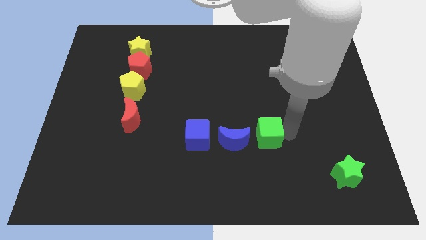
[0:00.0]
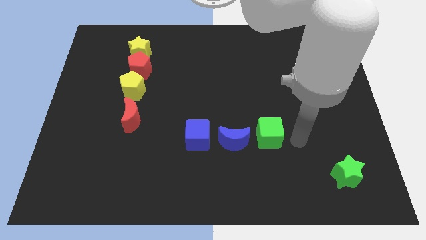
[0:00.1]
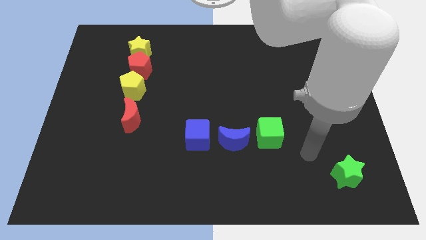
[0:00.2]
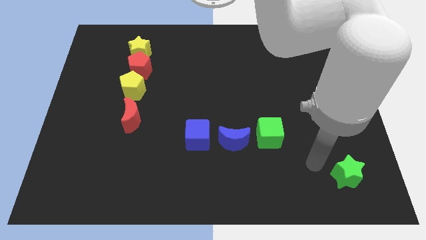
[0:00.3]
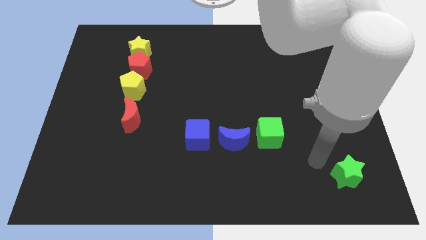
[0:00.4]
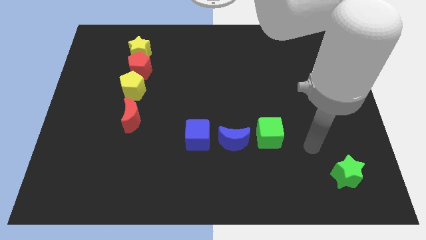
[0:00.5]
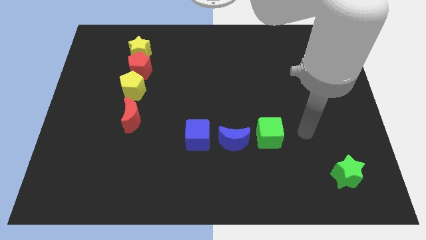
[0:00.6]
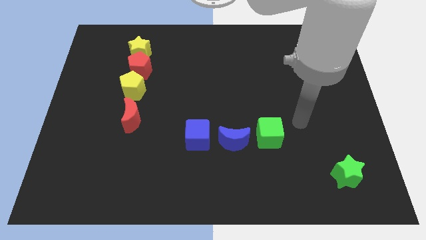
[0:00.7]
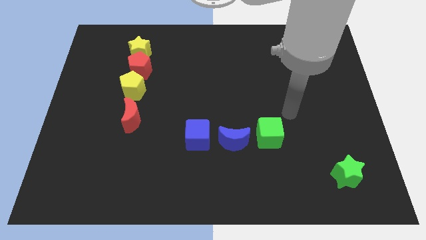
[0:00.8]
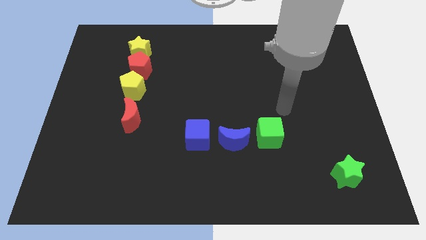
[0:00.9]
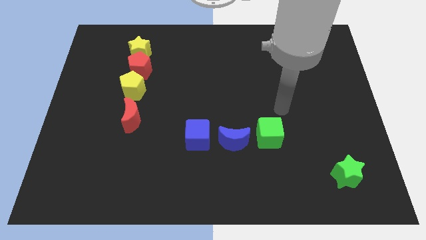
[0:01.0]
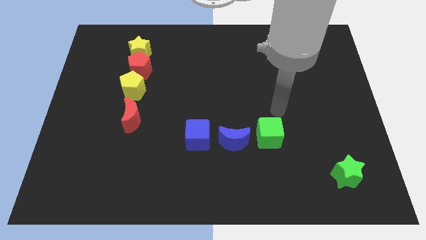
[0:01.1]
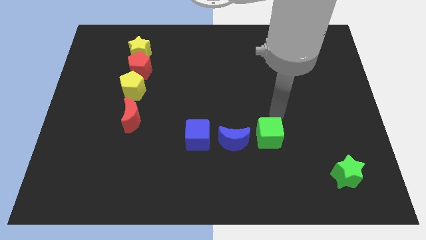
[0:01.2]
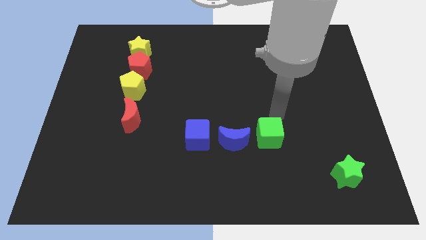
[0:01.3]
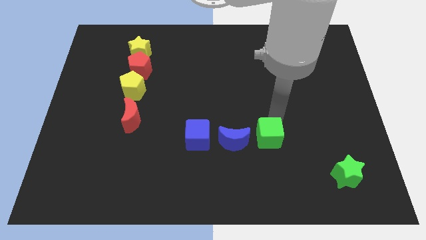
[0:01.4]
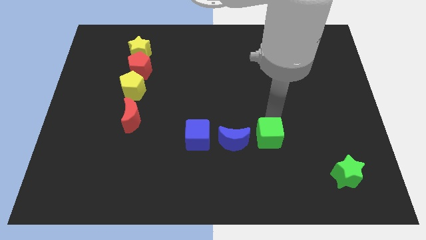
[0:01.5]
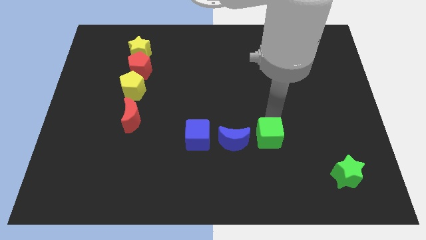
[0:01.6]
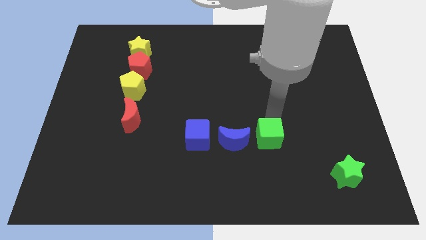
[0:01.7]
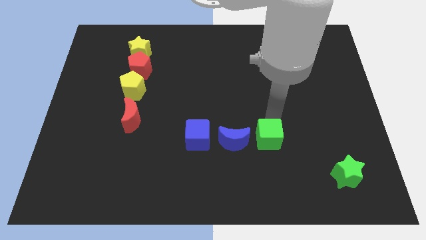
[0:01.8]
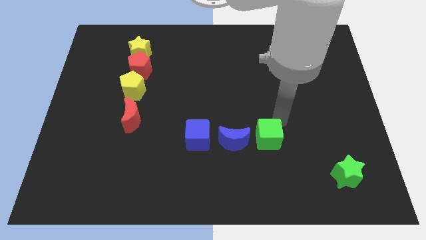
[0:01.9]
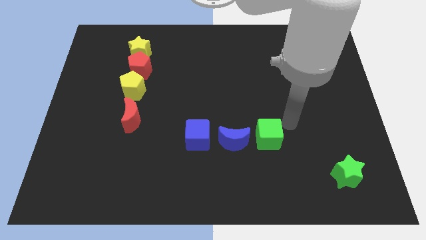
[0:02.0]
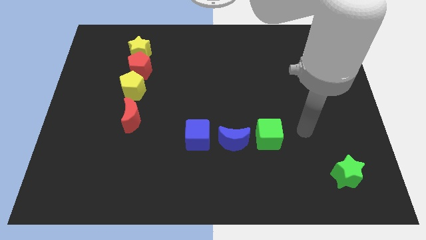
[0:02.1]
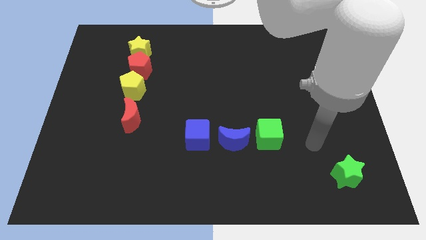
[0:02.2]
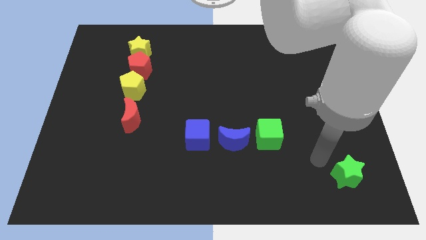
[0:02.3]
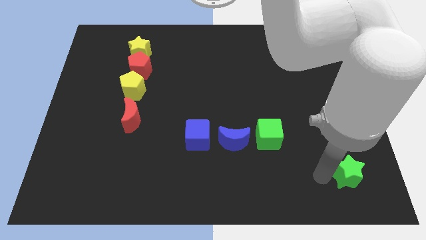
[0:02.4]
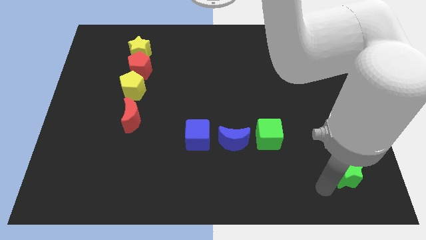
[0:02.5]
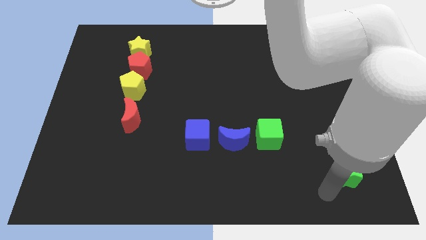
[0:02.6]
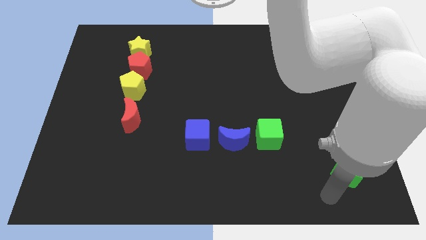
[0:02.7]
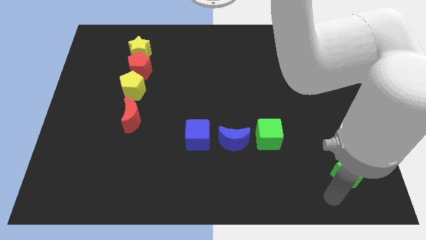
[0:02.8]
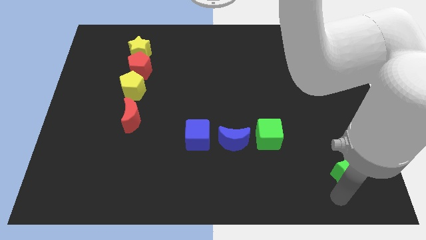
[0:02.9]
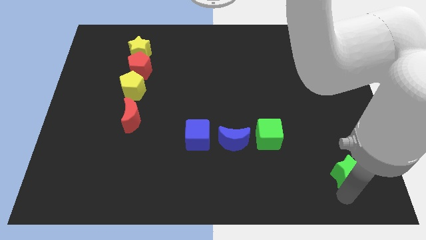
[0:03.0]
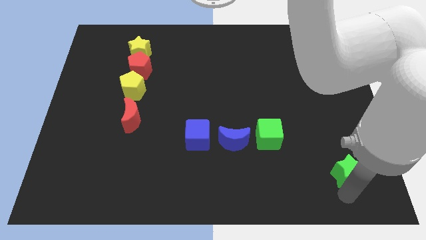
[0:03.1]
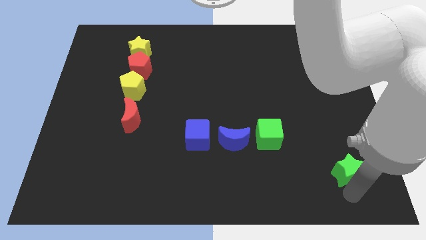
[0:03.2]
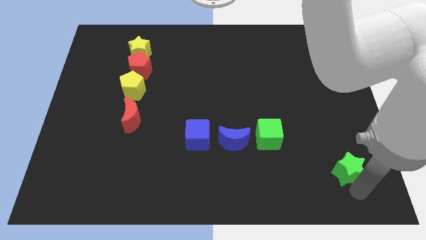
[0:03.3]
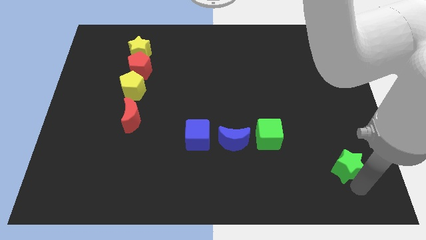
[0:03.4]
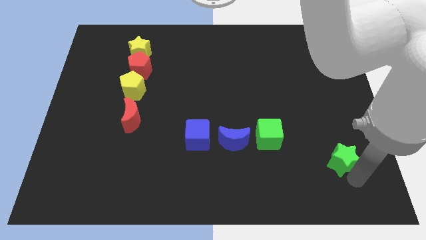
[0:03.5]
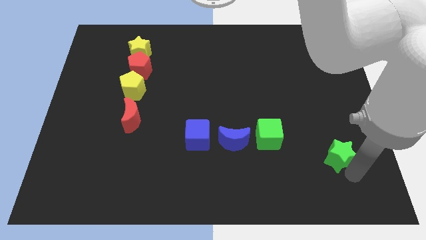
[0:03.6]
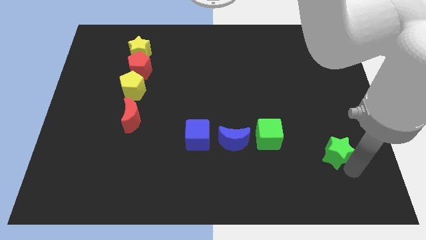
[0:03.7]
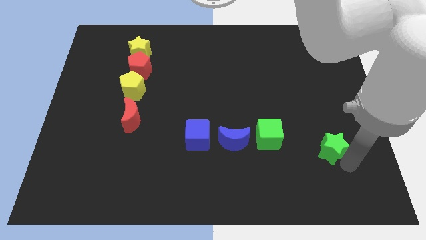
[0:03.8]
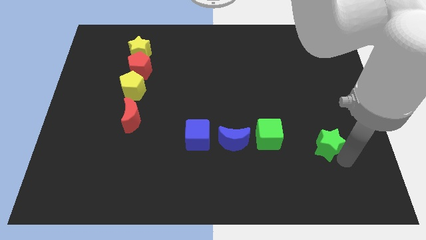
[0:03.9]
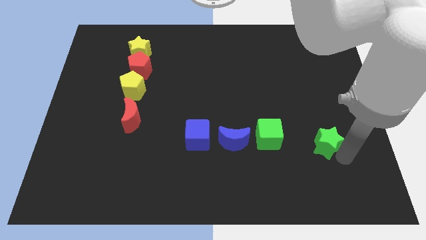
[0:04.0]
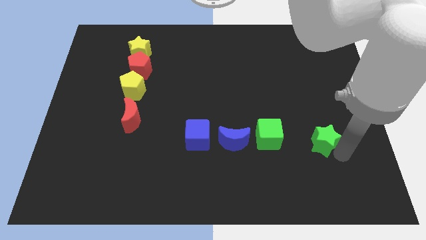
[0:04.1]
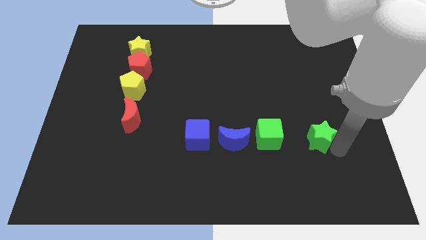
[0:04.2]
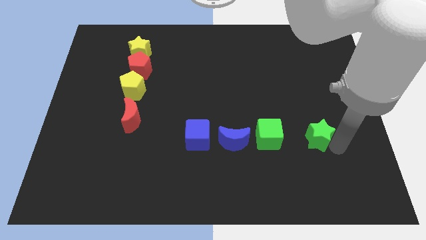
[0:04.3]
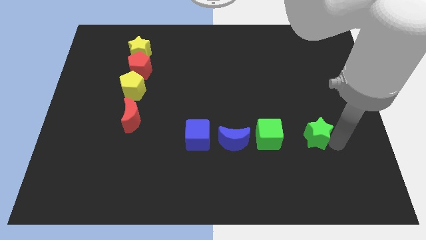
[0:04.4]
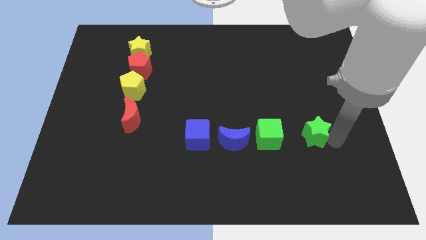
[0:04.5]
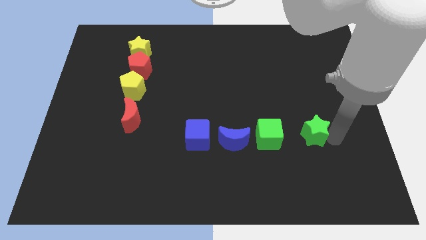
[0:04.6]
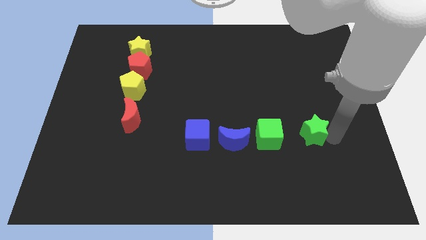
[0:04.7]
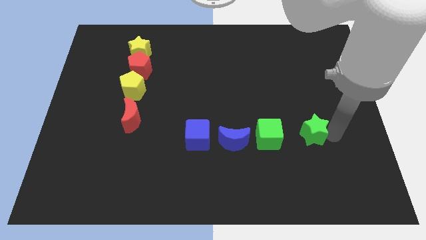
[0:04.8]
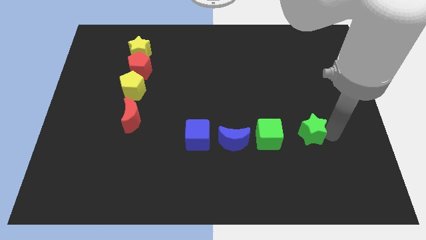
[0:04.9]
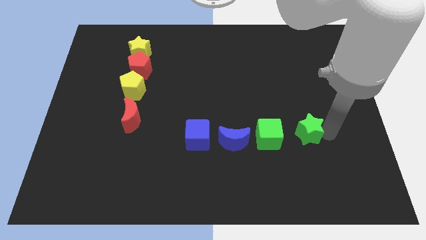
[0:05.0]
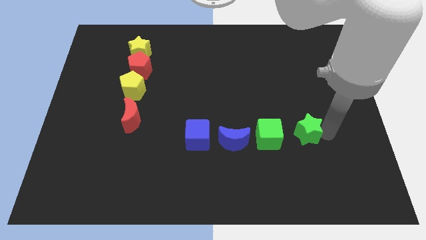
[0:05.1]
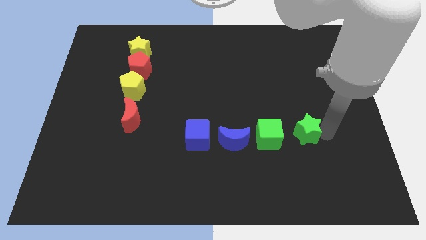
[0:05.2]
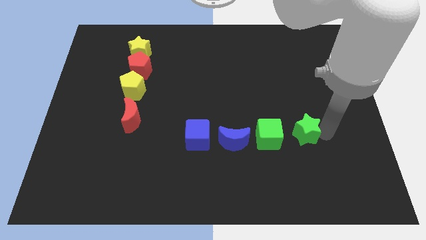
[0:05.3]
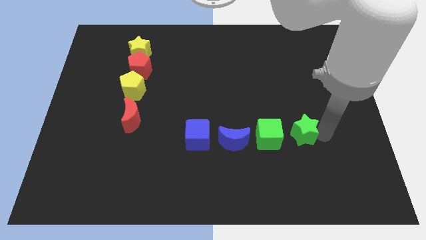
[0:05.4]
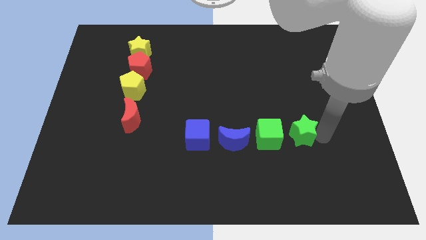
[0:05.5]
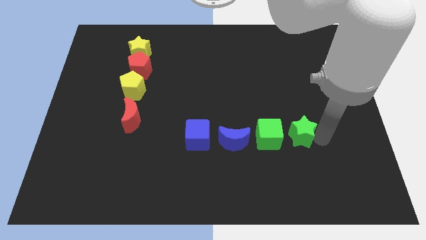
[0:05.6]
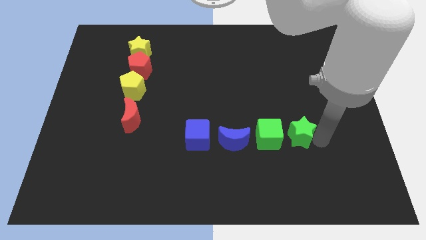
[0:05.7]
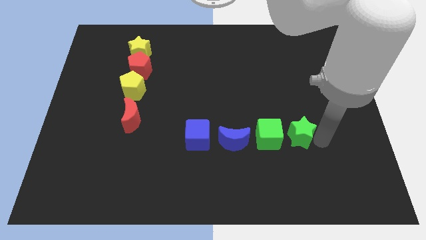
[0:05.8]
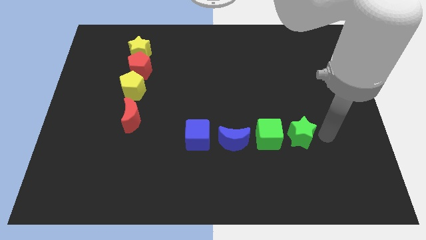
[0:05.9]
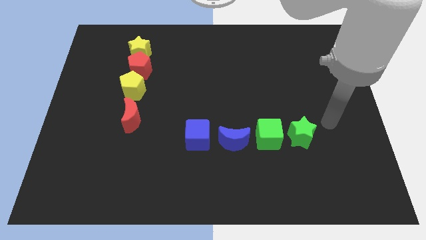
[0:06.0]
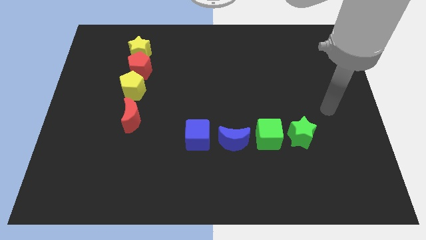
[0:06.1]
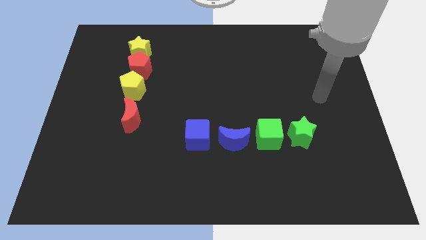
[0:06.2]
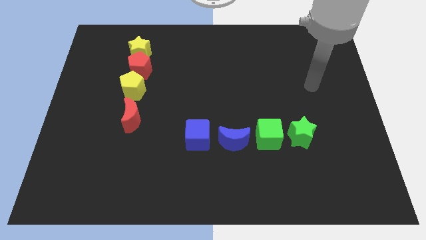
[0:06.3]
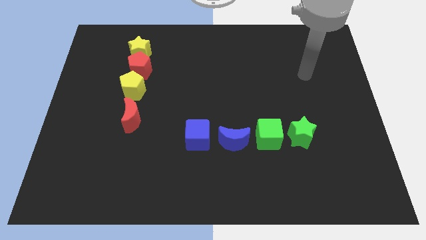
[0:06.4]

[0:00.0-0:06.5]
place green star to the right of green cube

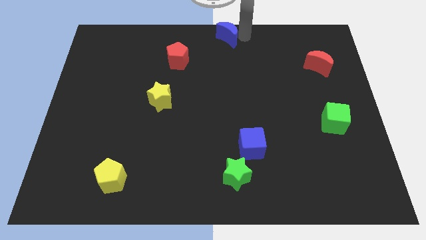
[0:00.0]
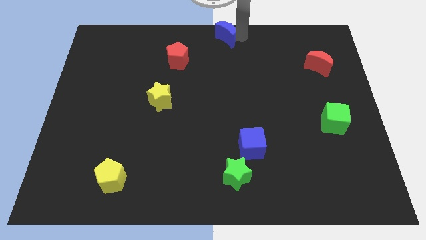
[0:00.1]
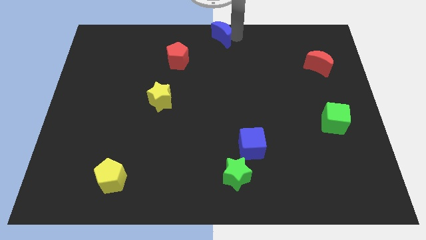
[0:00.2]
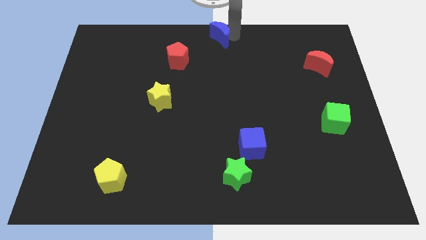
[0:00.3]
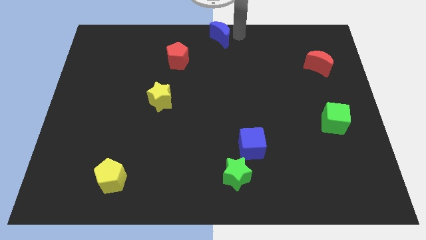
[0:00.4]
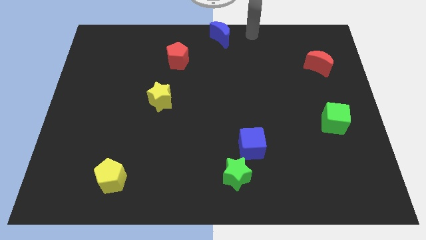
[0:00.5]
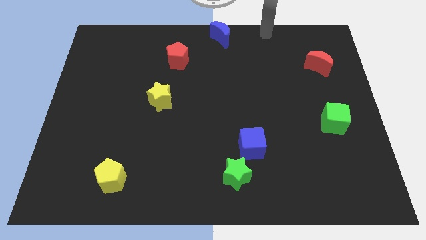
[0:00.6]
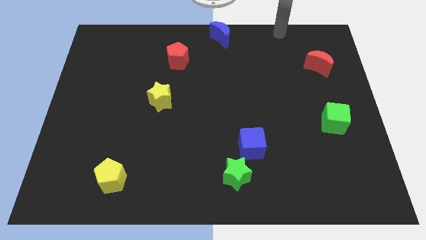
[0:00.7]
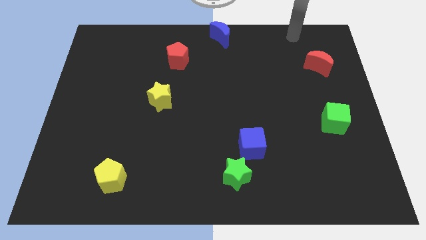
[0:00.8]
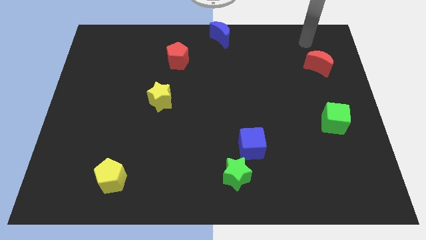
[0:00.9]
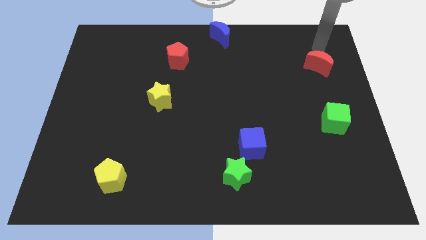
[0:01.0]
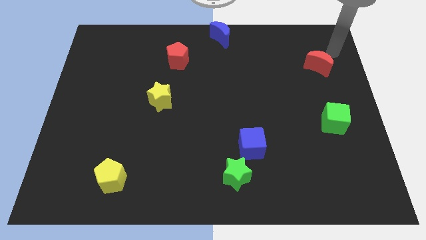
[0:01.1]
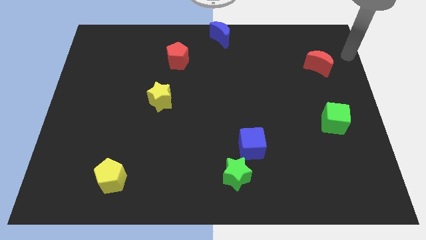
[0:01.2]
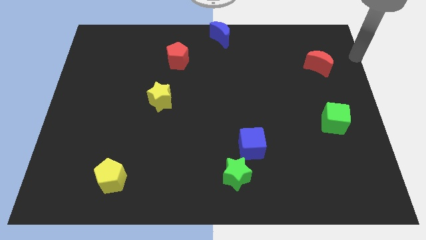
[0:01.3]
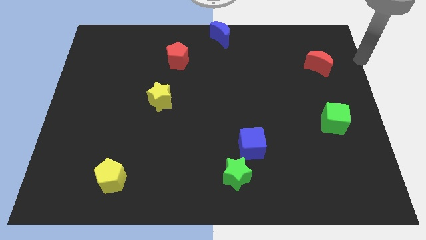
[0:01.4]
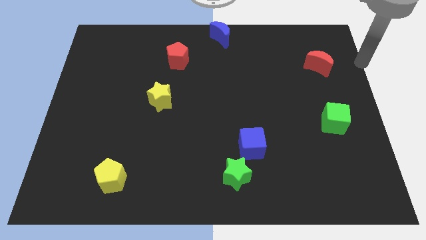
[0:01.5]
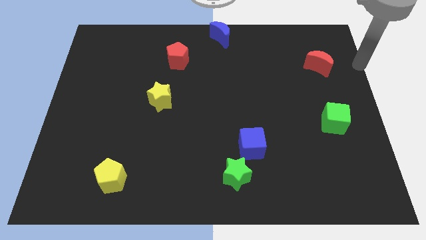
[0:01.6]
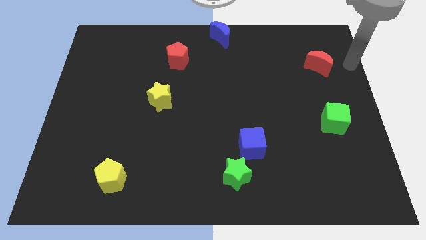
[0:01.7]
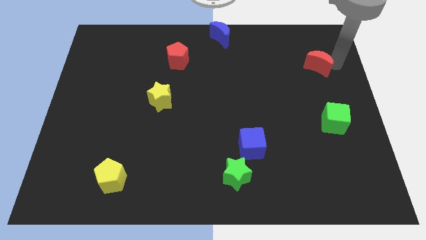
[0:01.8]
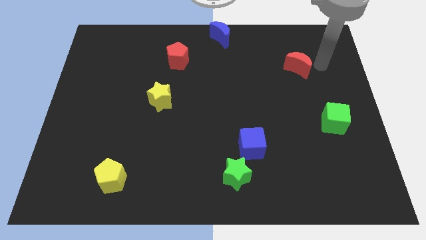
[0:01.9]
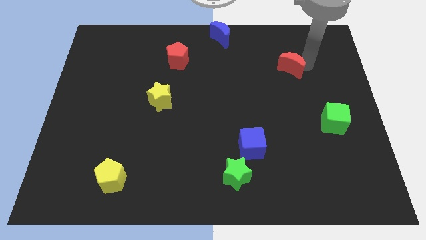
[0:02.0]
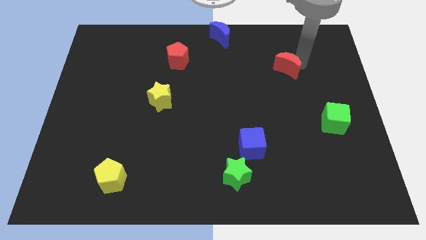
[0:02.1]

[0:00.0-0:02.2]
move the red crescent towards the centre of the board

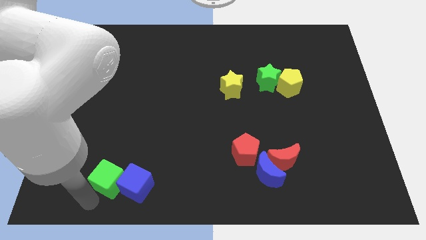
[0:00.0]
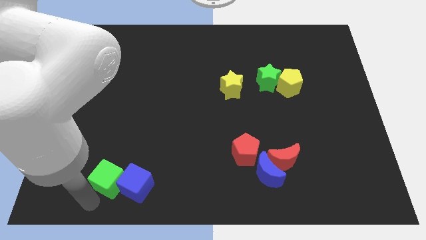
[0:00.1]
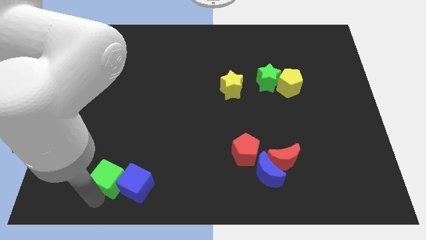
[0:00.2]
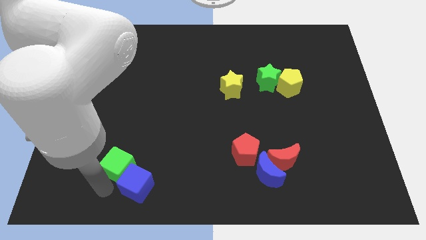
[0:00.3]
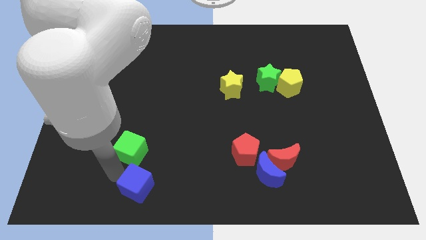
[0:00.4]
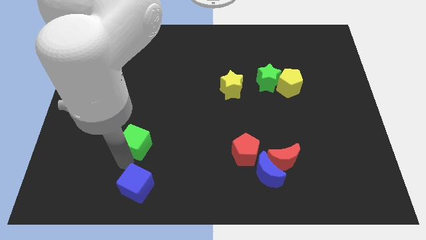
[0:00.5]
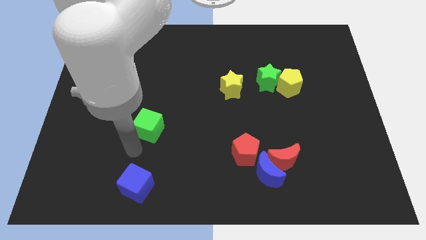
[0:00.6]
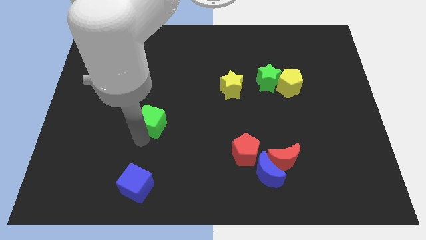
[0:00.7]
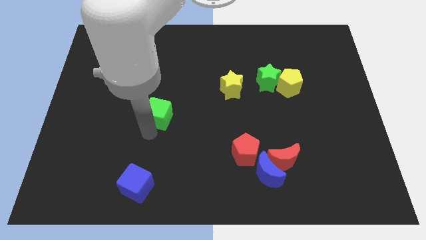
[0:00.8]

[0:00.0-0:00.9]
put the green cube diagonal to the red pentagon
